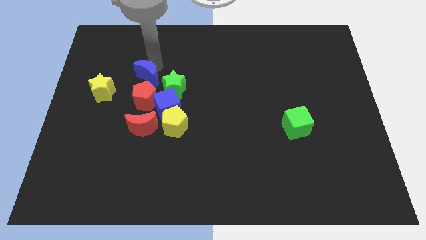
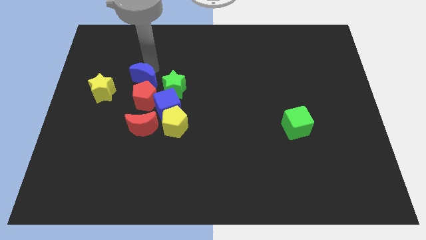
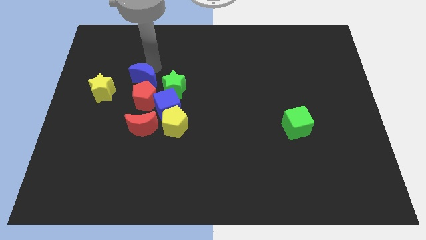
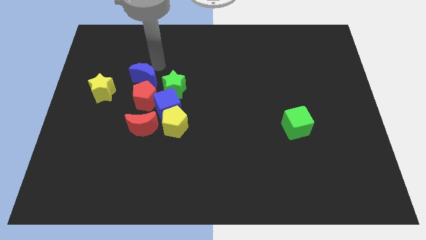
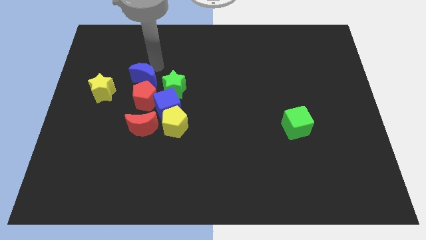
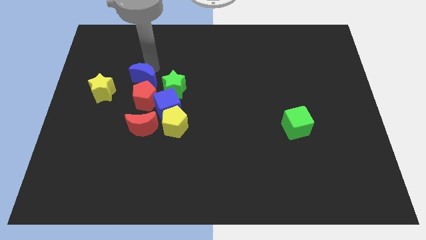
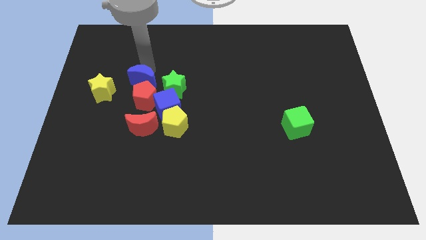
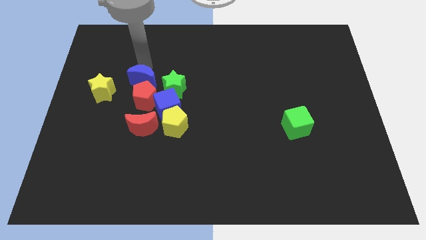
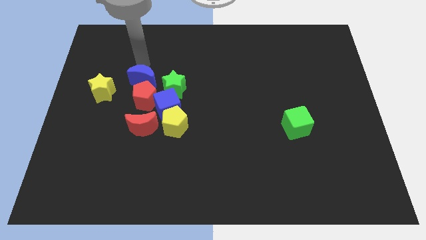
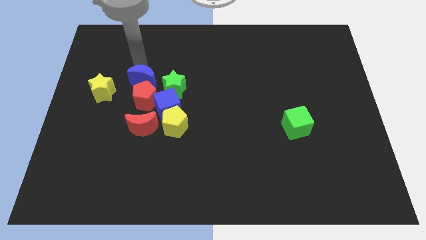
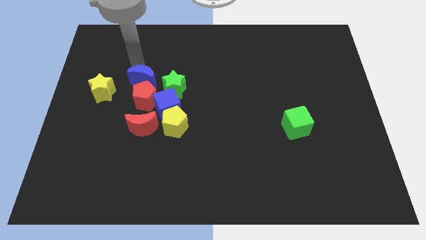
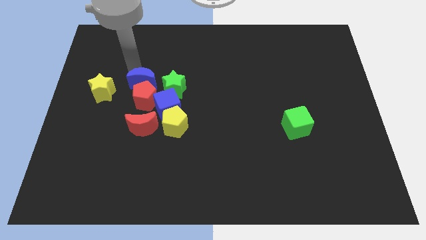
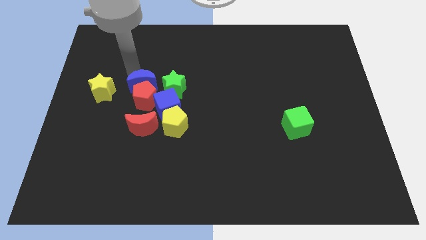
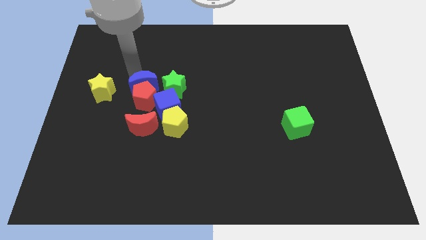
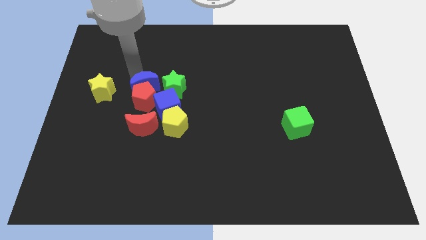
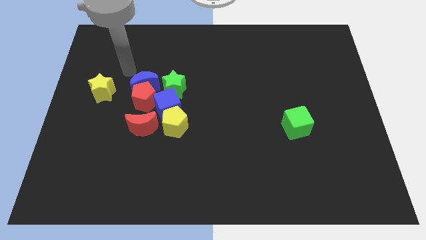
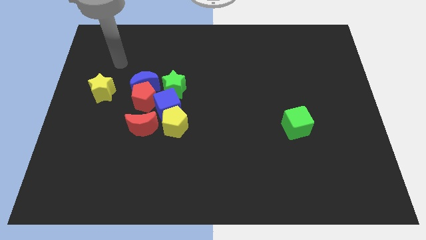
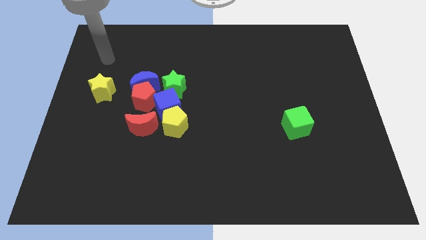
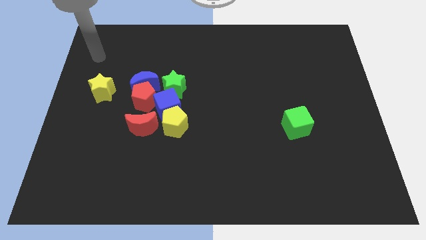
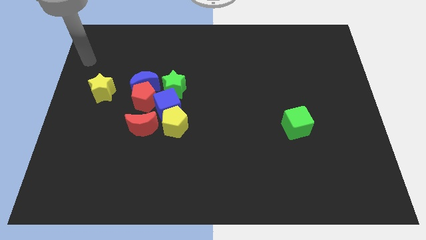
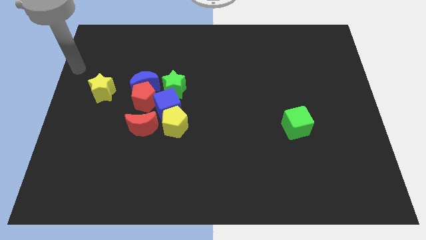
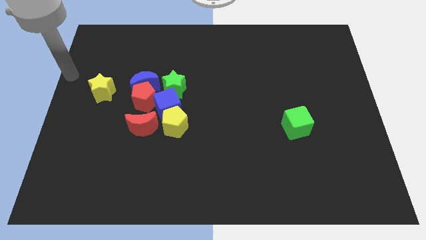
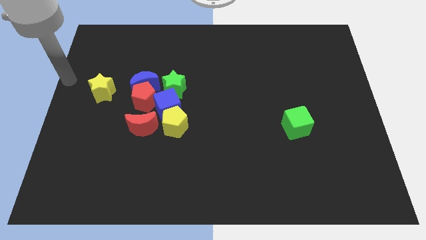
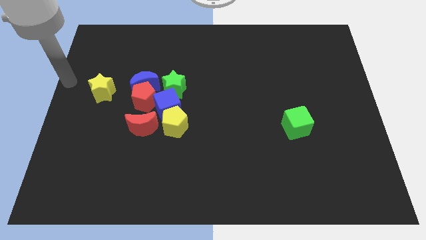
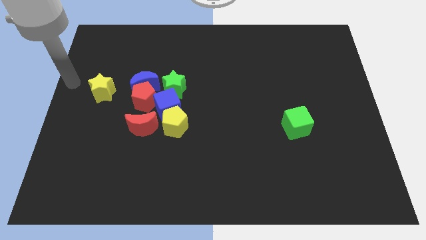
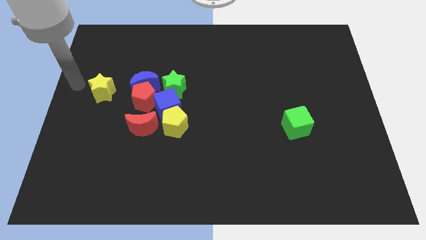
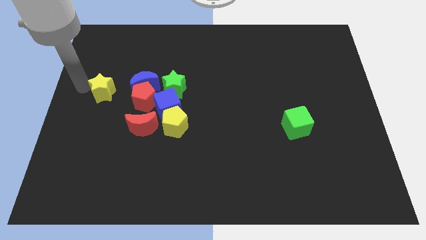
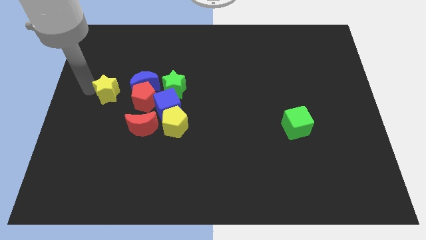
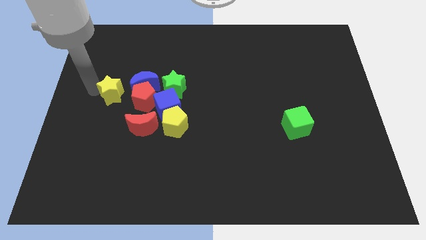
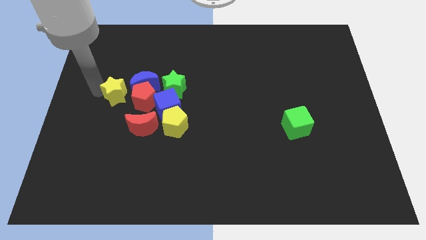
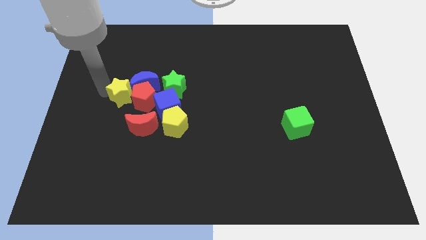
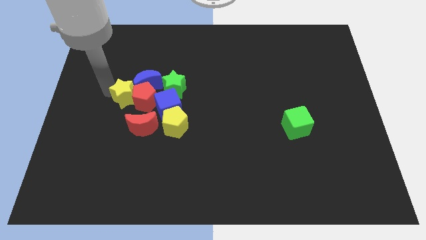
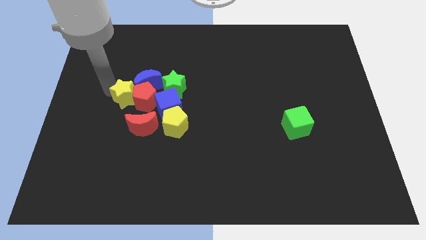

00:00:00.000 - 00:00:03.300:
place yellow star beside red pentagon

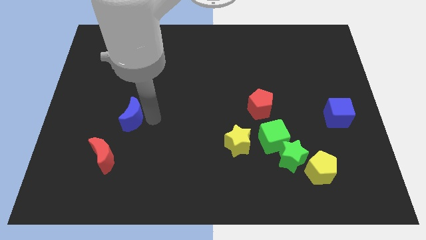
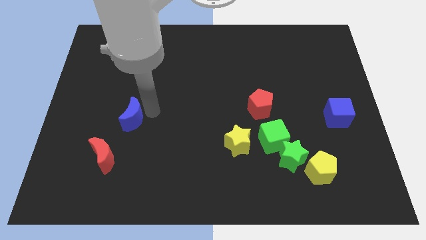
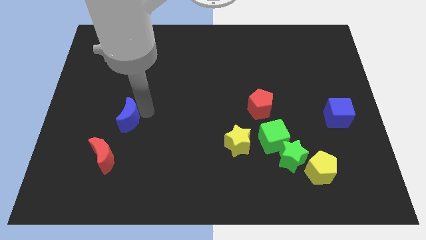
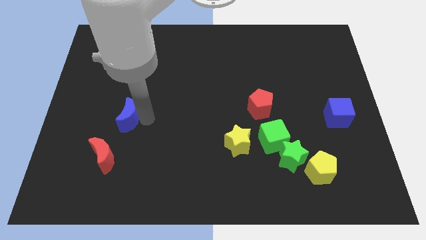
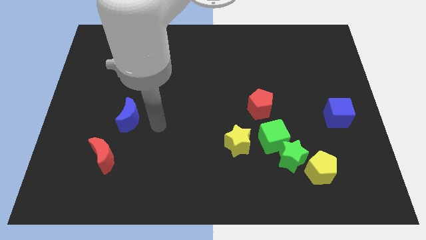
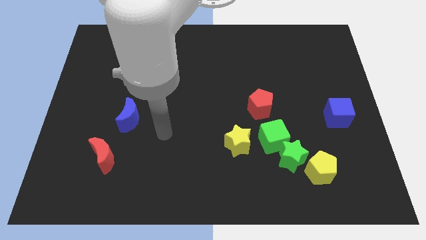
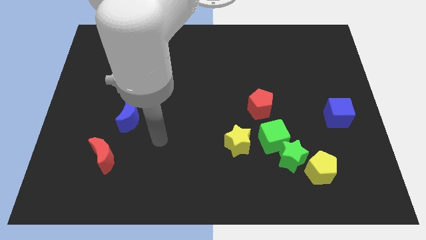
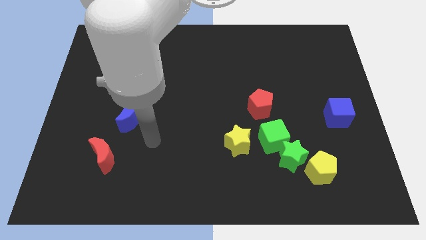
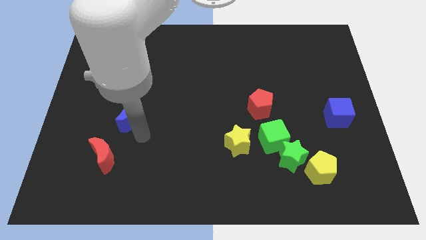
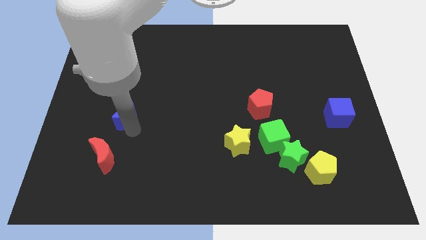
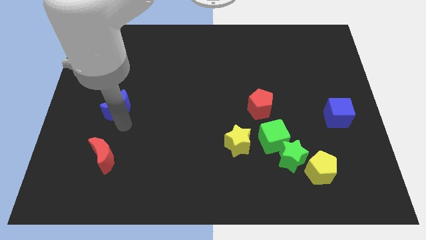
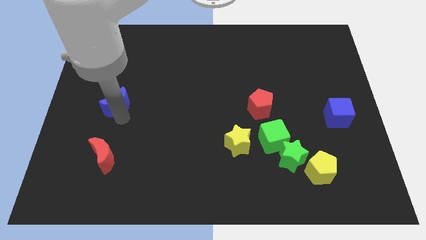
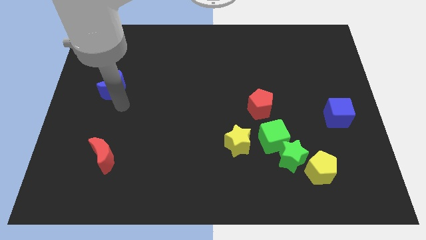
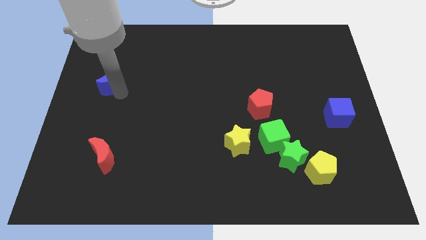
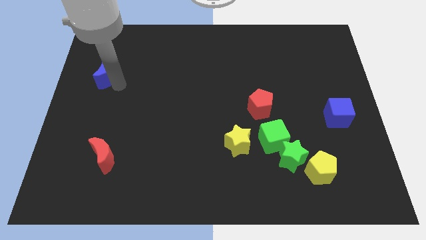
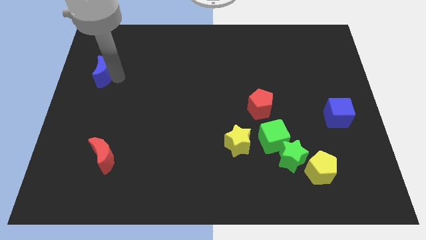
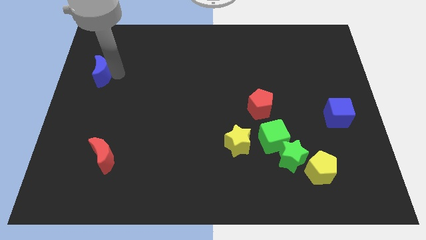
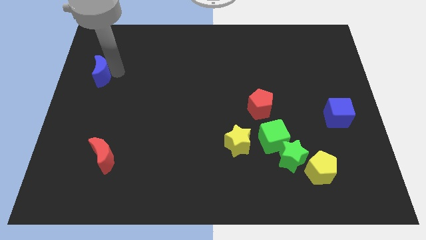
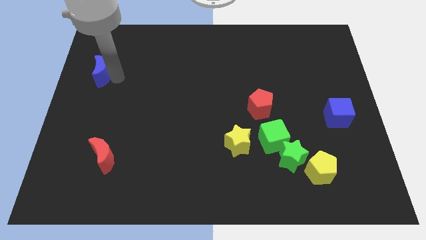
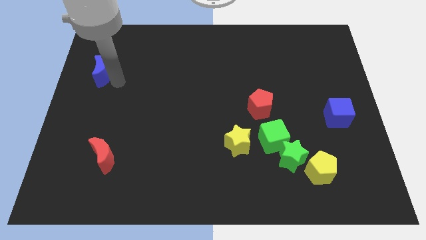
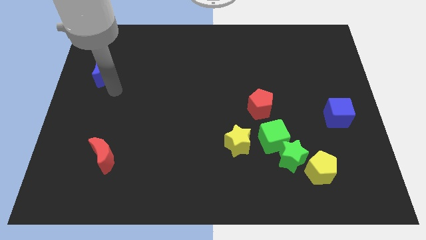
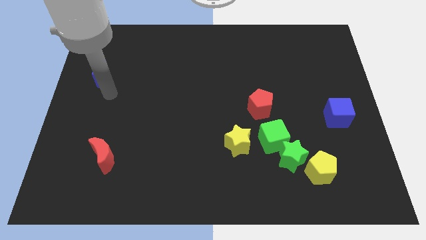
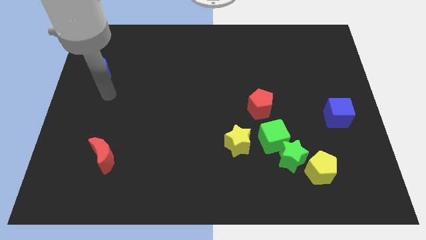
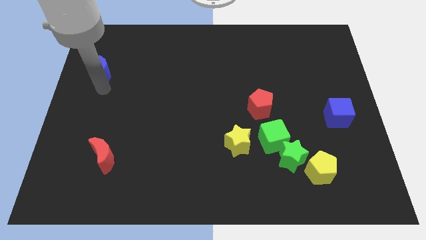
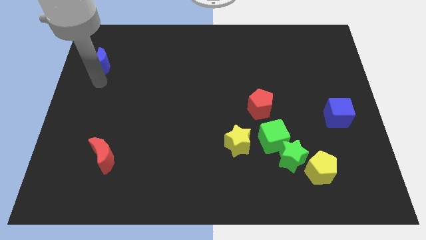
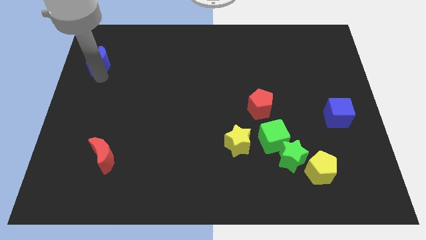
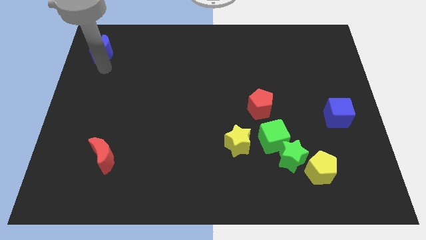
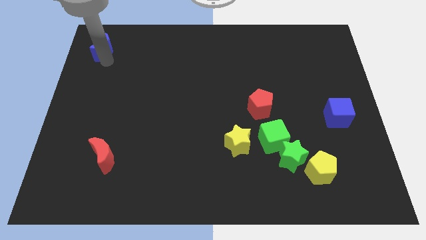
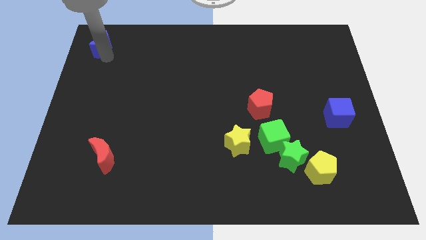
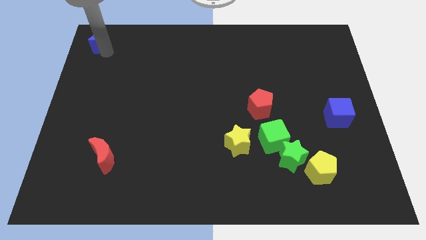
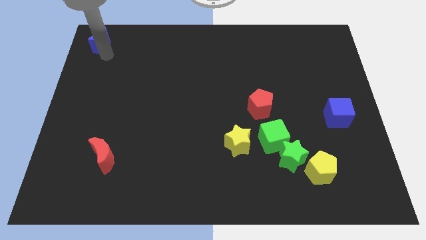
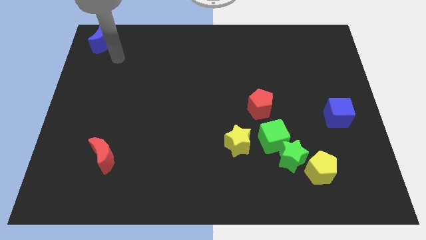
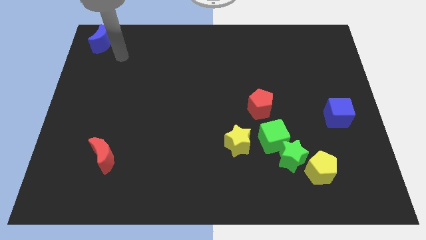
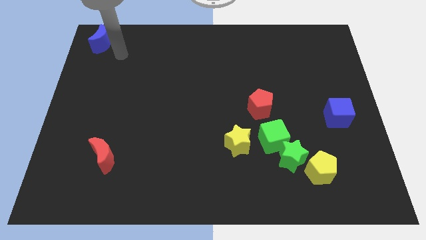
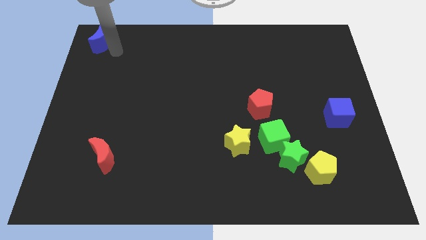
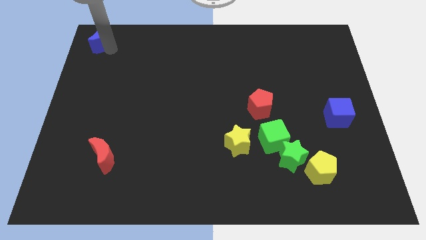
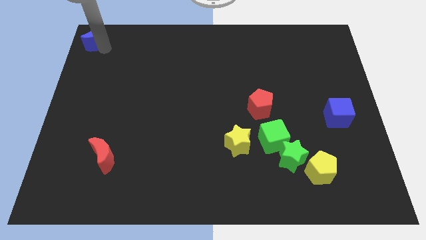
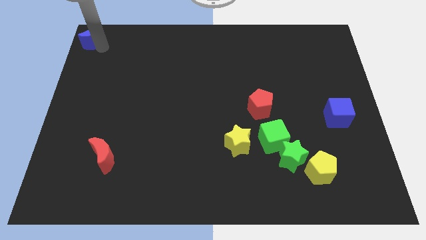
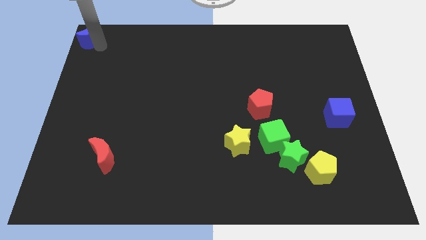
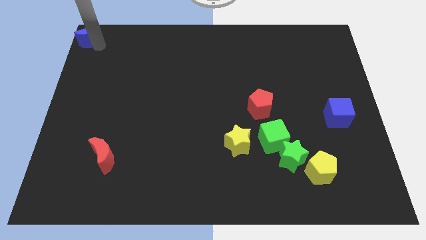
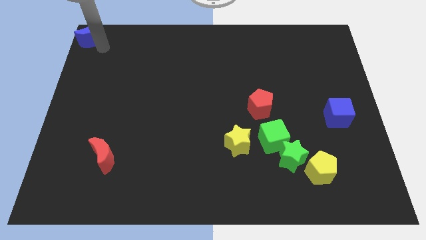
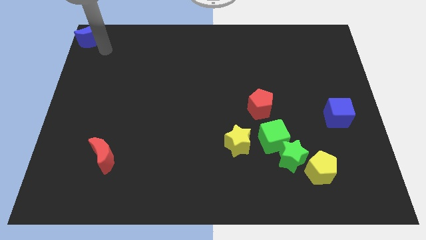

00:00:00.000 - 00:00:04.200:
place the blue moon to the top left side

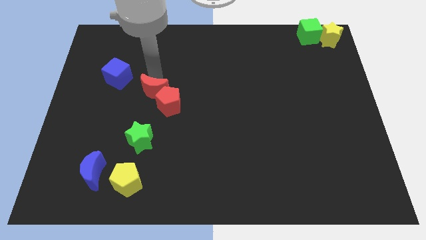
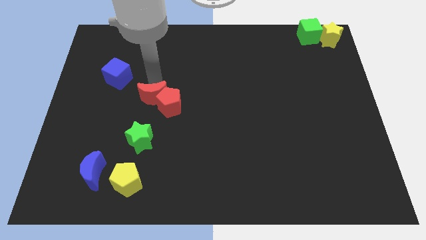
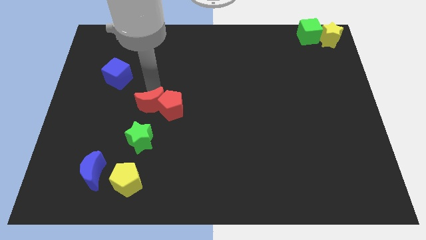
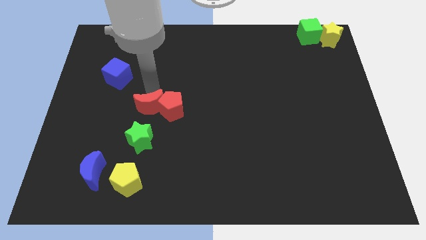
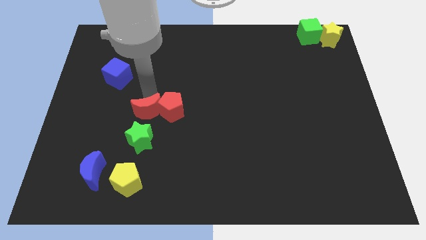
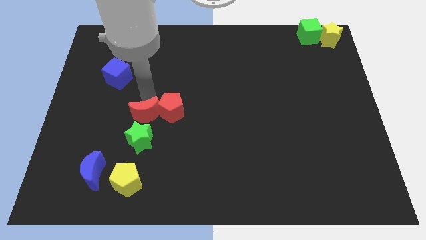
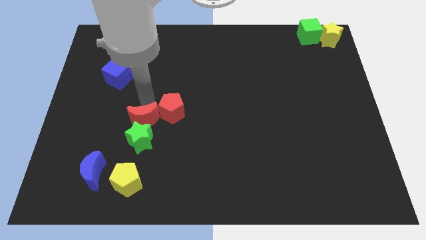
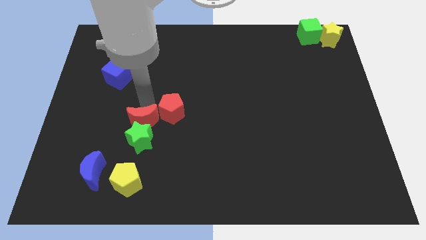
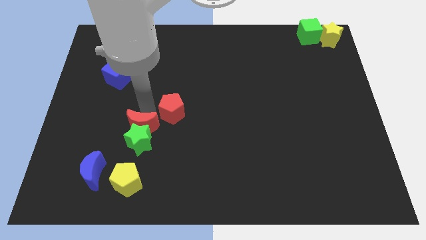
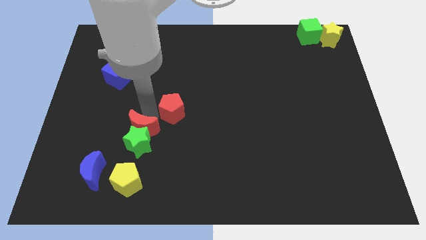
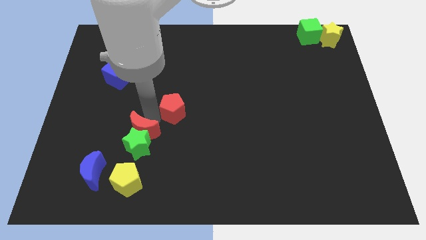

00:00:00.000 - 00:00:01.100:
push the red crescent into the top side of the green star

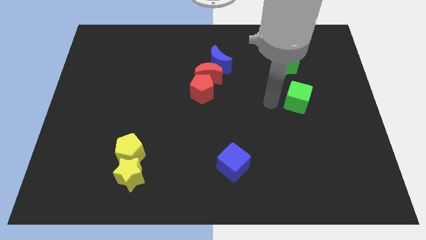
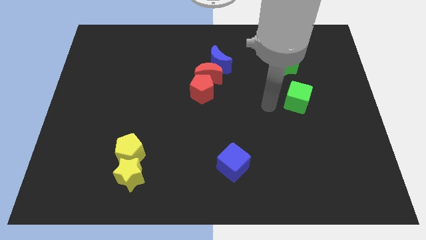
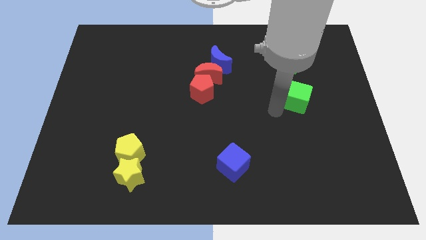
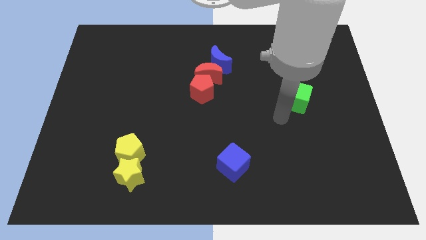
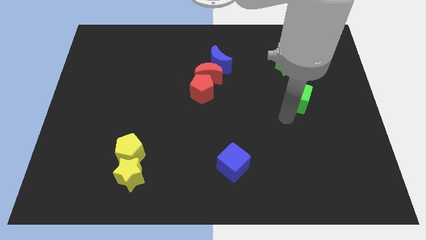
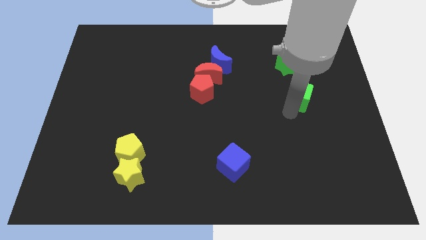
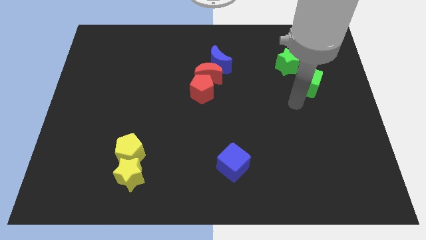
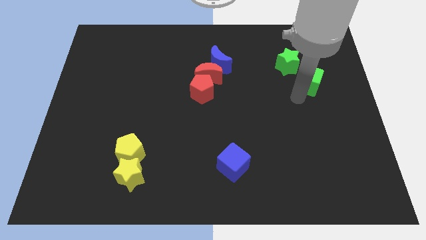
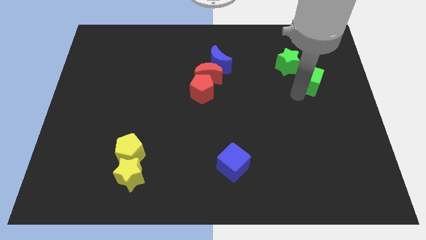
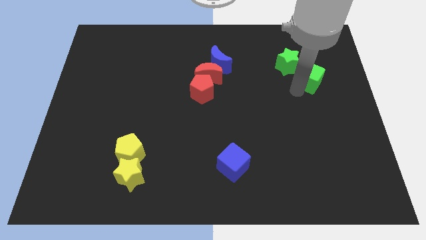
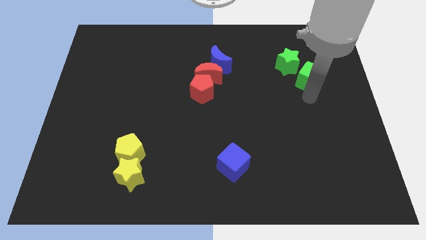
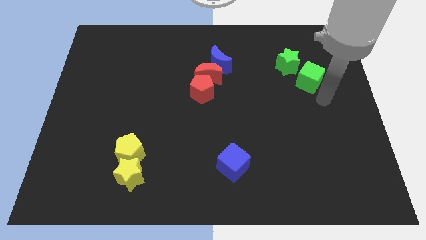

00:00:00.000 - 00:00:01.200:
place the green cube to bottom of the green star
